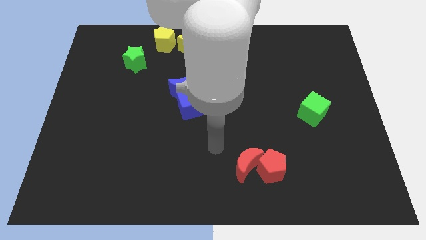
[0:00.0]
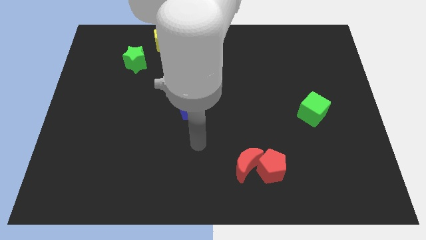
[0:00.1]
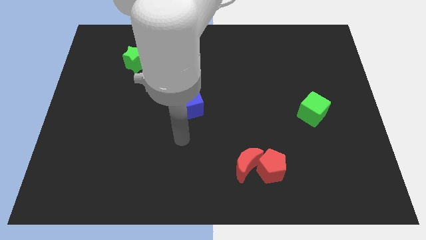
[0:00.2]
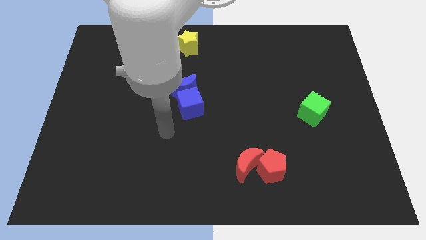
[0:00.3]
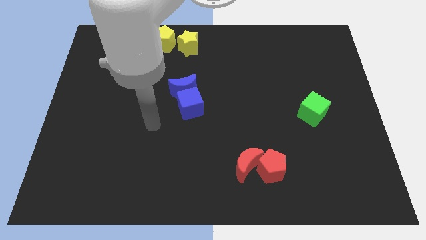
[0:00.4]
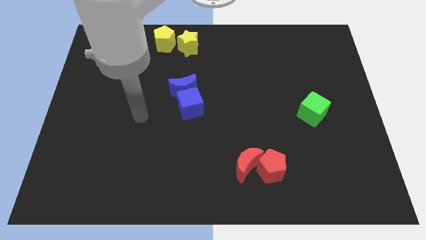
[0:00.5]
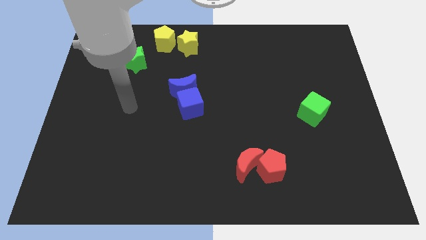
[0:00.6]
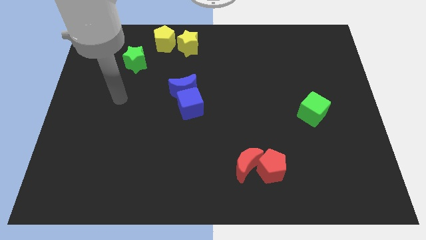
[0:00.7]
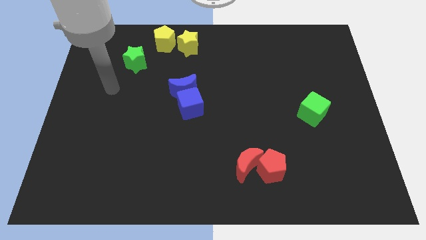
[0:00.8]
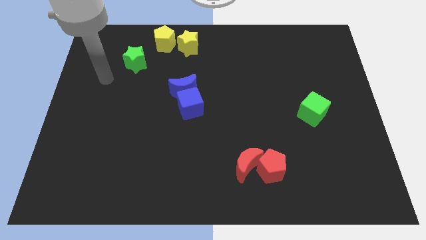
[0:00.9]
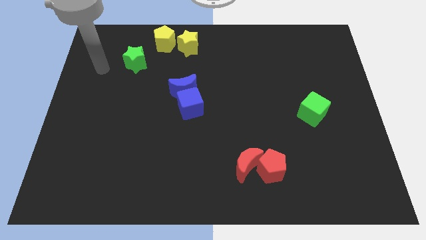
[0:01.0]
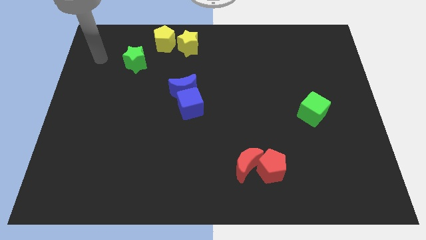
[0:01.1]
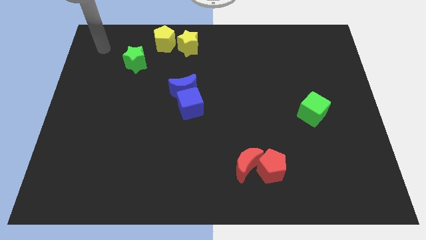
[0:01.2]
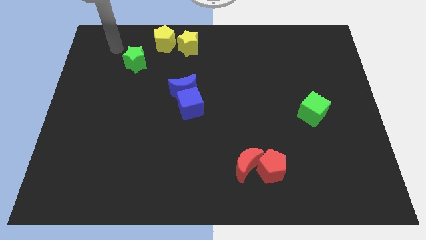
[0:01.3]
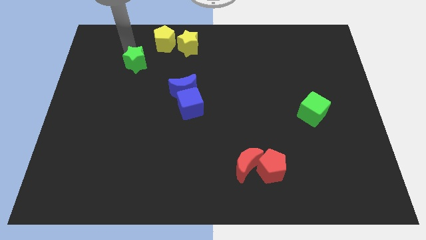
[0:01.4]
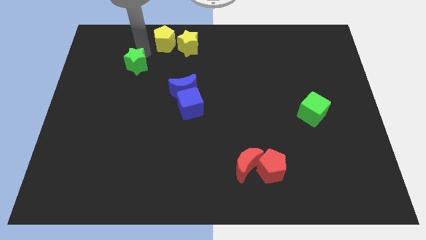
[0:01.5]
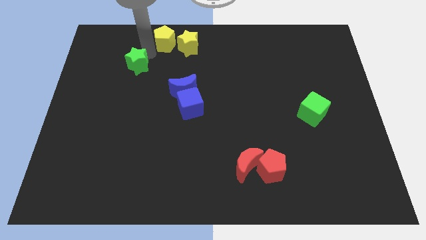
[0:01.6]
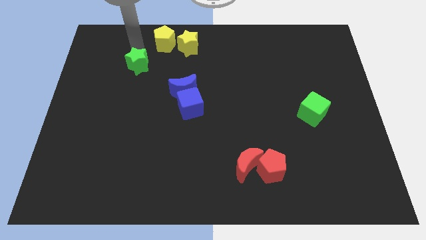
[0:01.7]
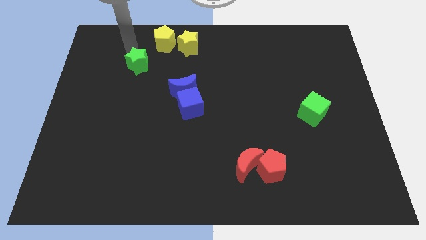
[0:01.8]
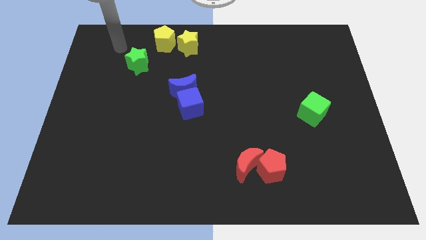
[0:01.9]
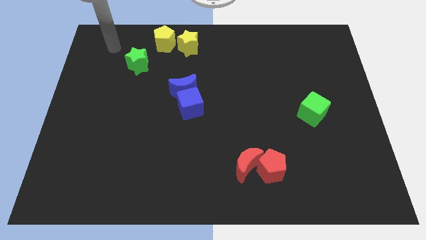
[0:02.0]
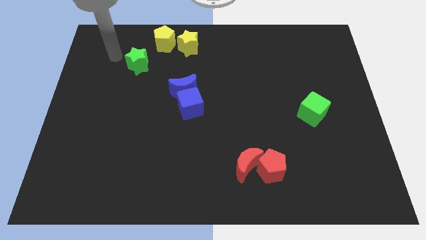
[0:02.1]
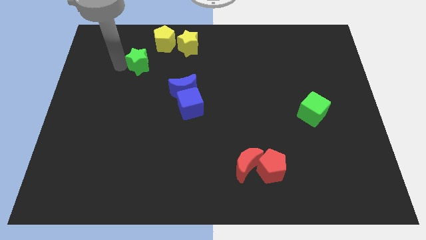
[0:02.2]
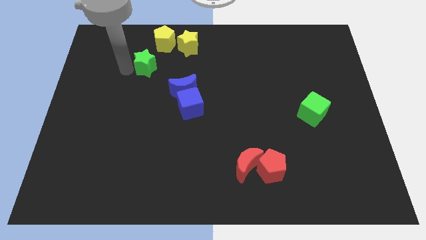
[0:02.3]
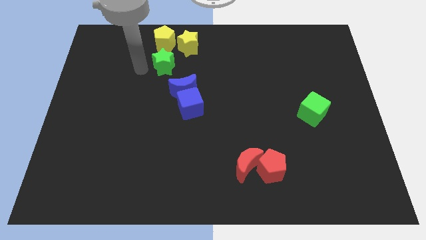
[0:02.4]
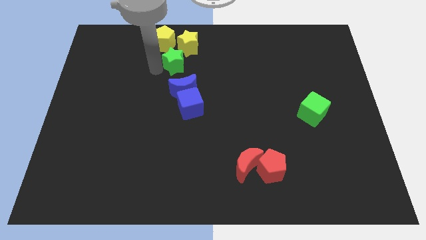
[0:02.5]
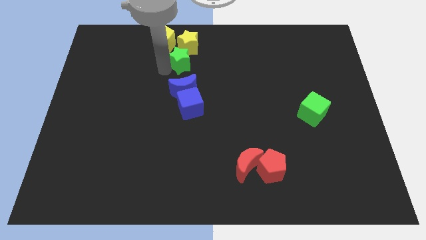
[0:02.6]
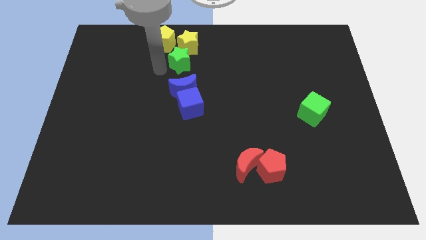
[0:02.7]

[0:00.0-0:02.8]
move green star in between blue and yellow blocks

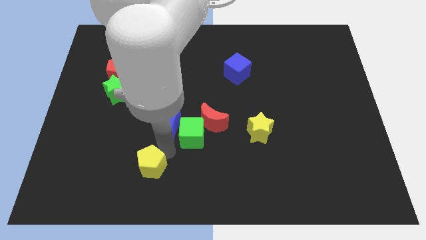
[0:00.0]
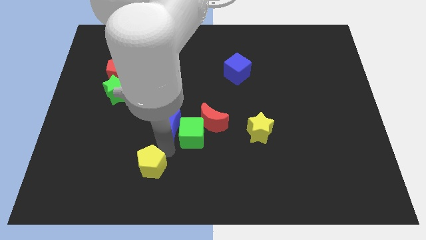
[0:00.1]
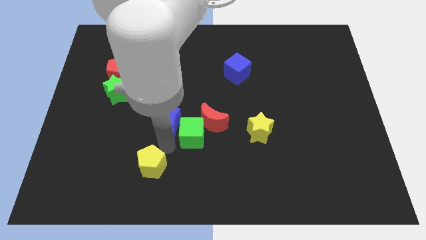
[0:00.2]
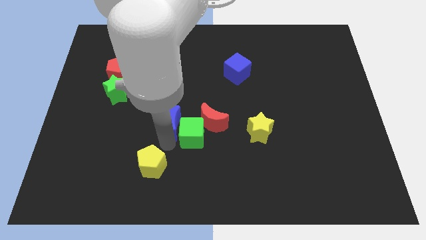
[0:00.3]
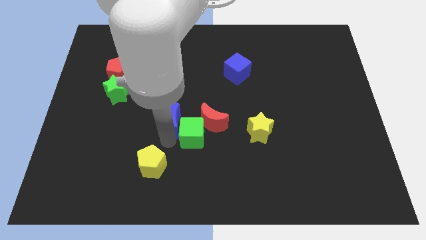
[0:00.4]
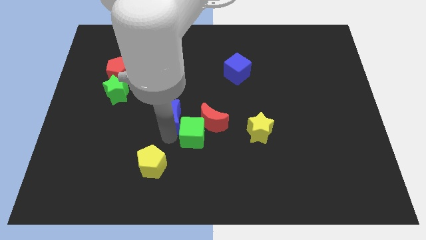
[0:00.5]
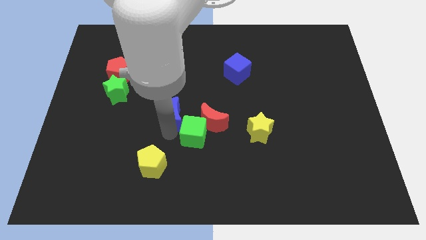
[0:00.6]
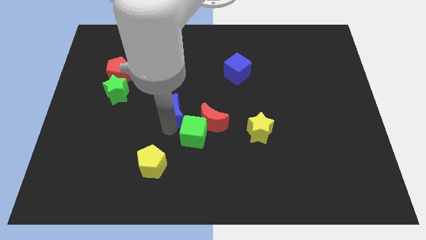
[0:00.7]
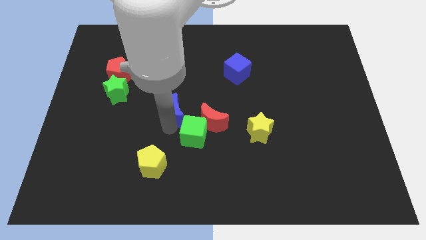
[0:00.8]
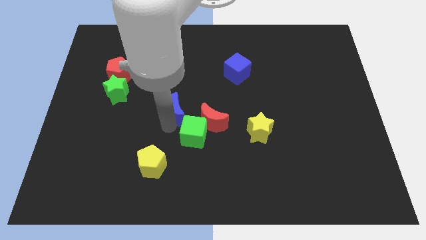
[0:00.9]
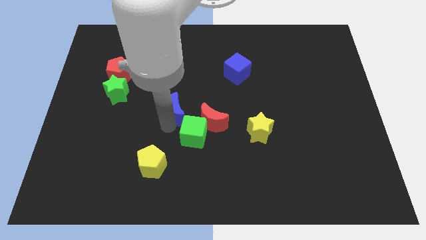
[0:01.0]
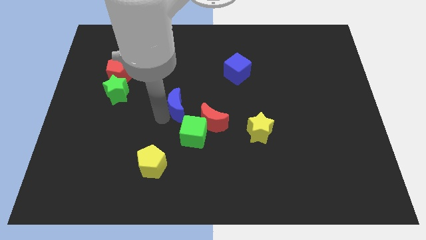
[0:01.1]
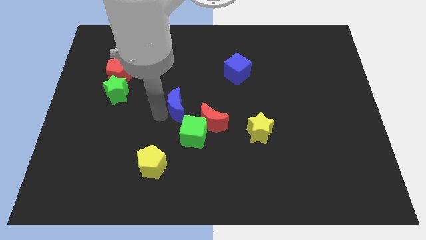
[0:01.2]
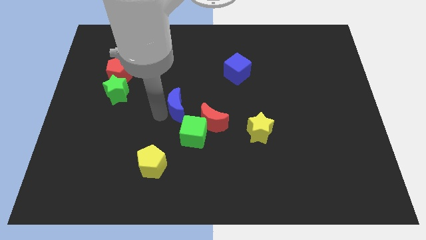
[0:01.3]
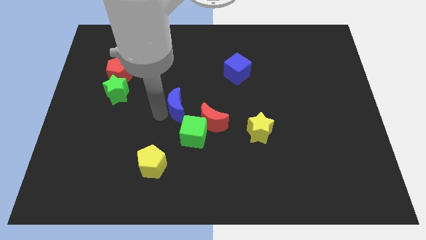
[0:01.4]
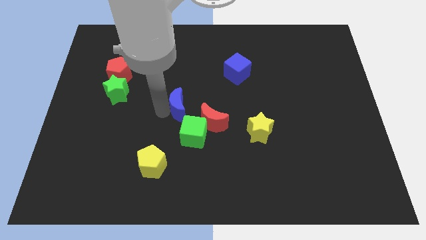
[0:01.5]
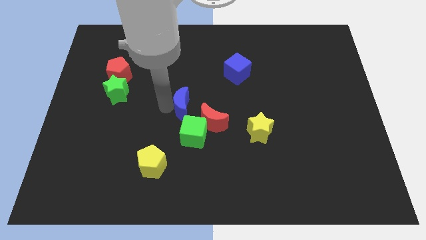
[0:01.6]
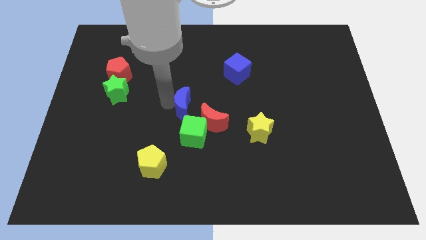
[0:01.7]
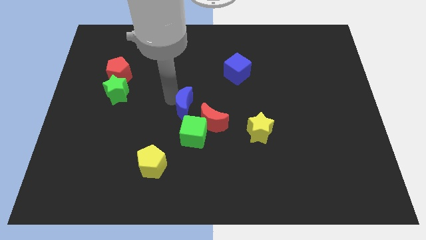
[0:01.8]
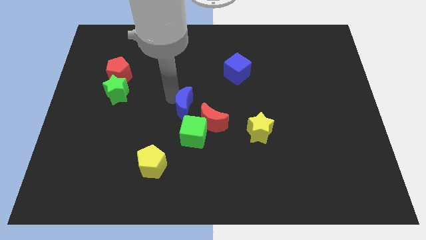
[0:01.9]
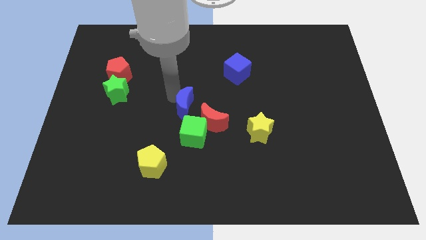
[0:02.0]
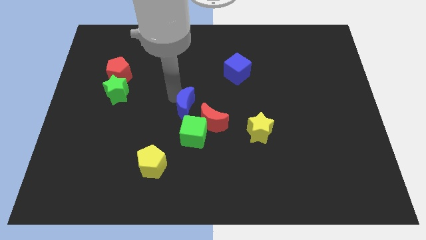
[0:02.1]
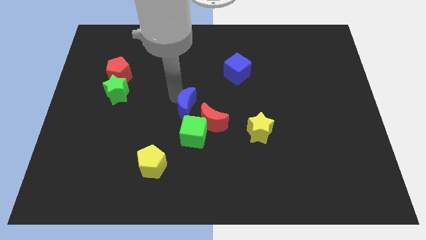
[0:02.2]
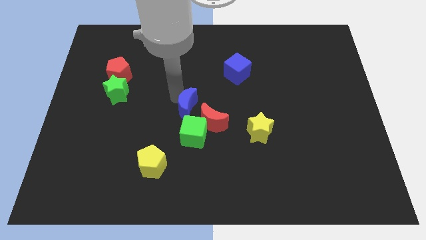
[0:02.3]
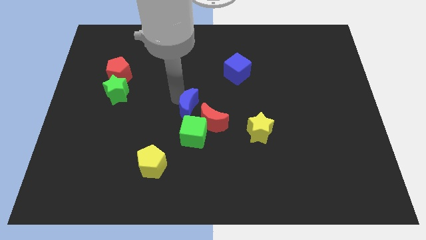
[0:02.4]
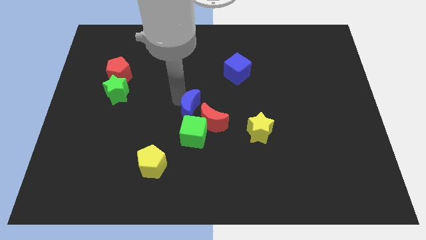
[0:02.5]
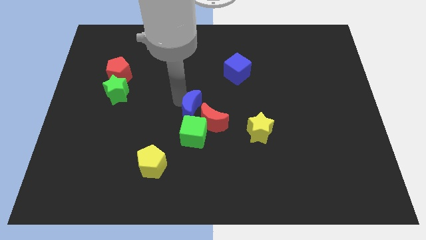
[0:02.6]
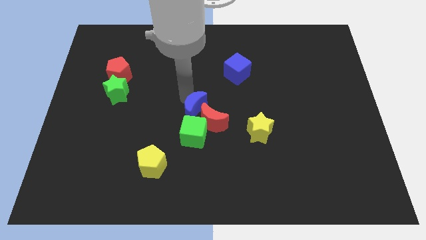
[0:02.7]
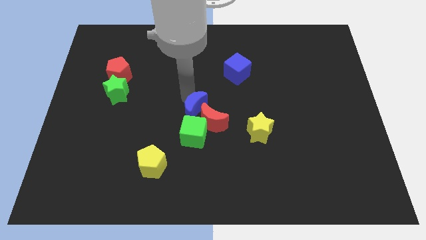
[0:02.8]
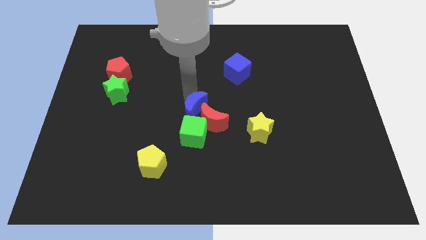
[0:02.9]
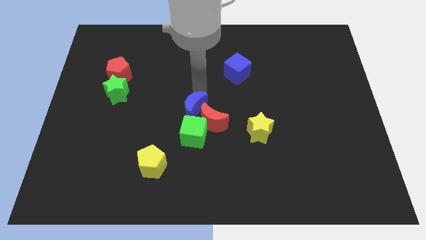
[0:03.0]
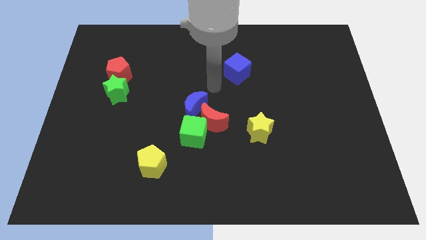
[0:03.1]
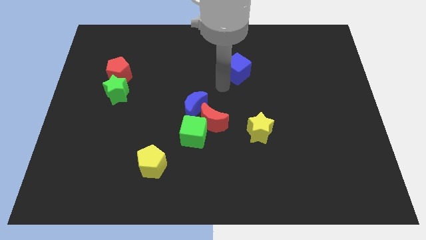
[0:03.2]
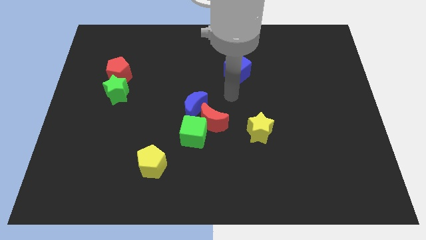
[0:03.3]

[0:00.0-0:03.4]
move the blue crescent close to the red crescent

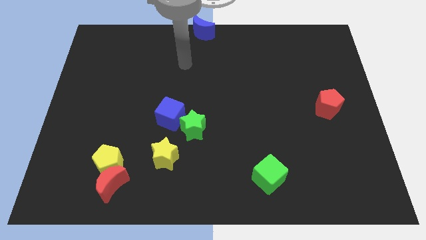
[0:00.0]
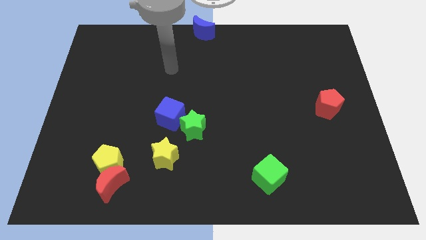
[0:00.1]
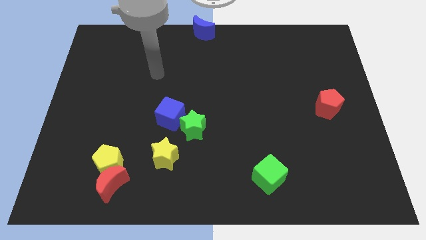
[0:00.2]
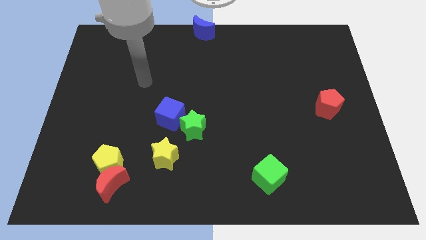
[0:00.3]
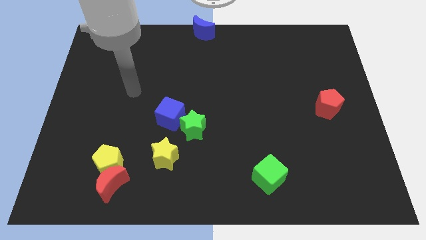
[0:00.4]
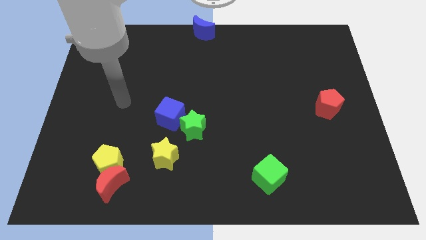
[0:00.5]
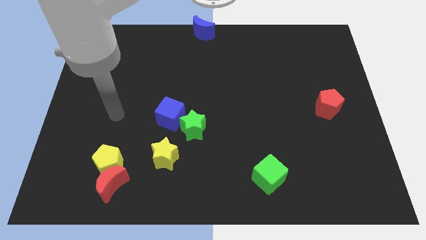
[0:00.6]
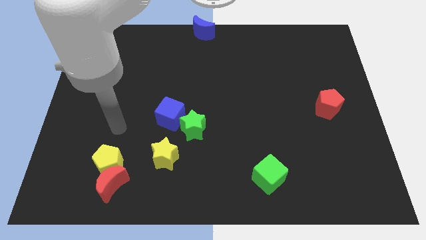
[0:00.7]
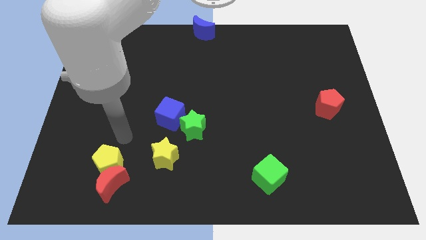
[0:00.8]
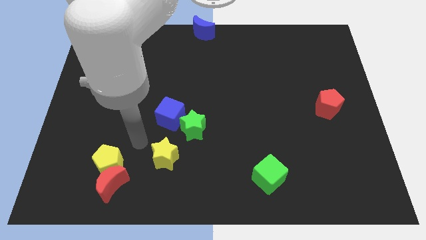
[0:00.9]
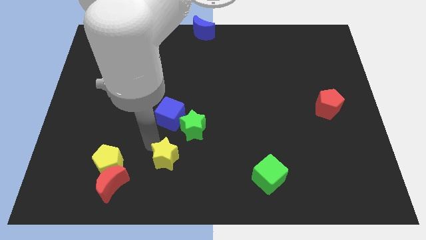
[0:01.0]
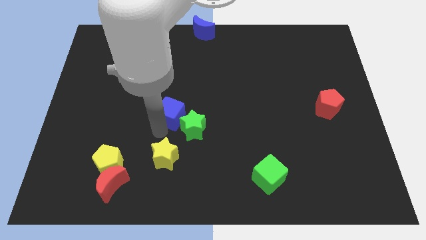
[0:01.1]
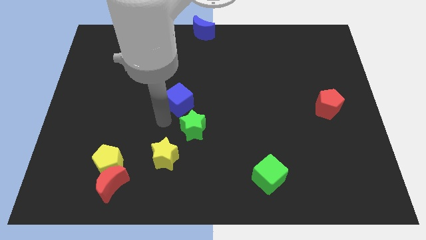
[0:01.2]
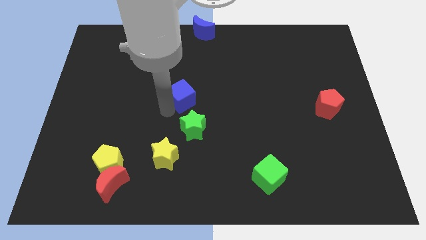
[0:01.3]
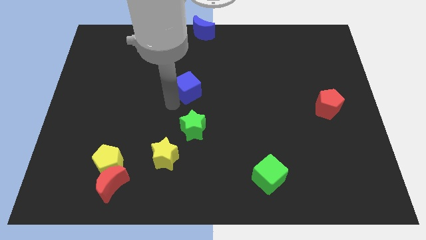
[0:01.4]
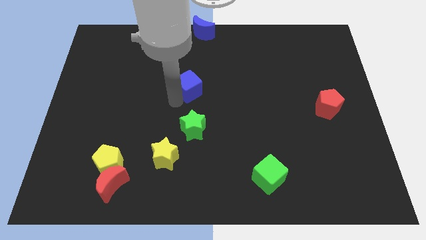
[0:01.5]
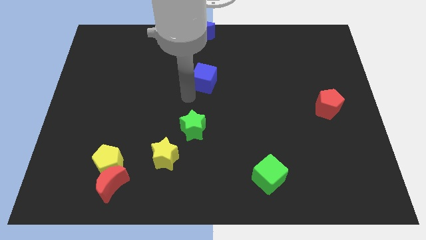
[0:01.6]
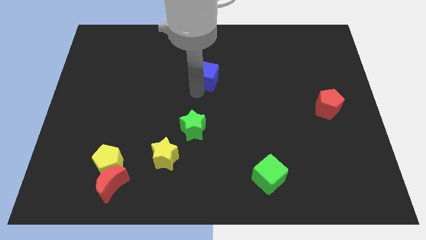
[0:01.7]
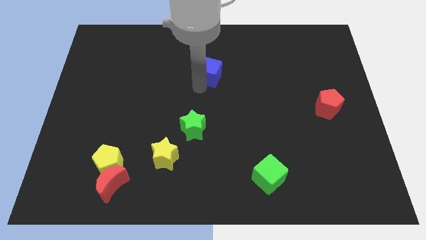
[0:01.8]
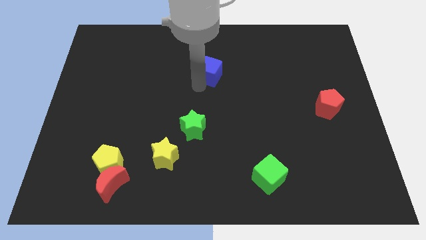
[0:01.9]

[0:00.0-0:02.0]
separate the blue cube from the green star

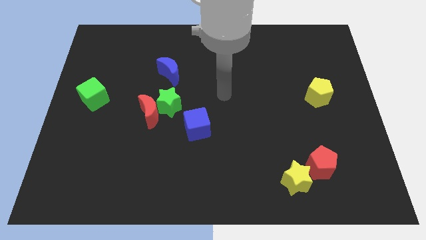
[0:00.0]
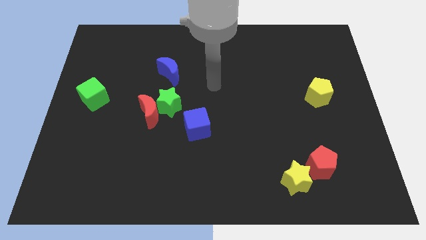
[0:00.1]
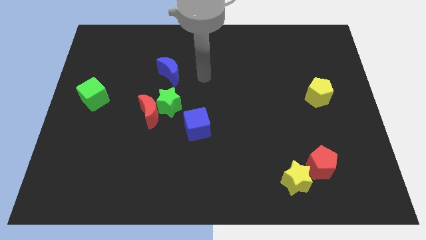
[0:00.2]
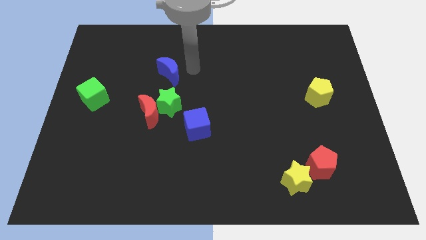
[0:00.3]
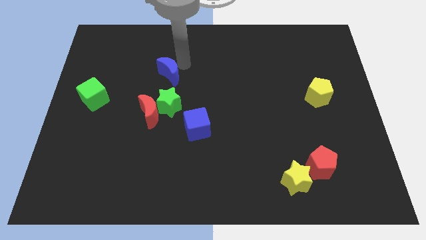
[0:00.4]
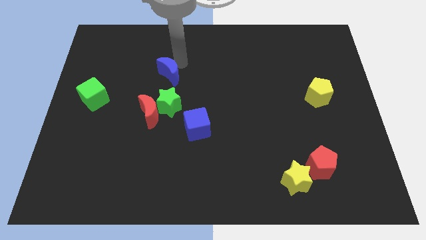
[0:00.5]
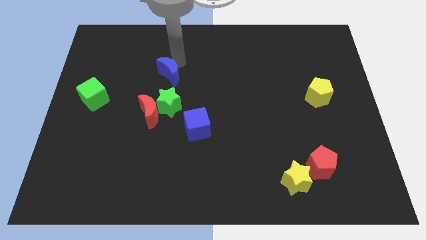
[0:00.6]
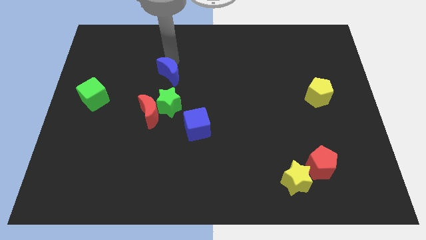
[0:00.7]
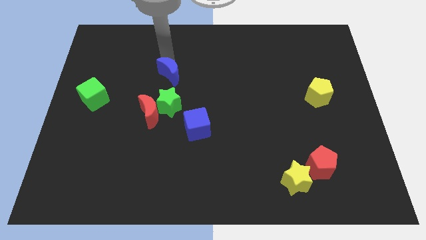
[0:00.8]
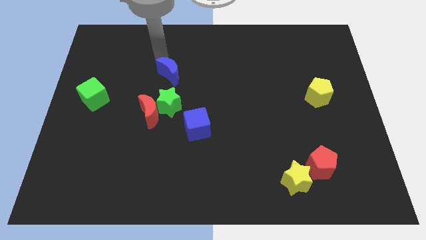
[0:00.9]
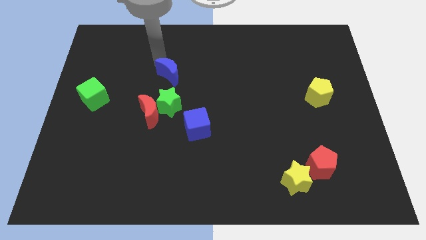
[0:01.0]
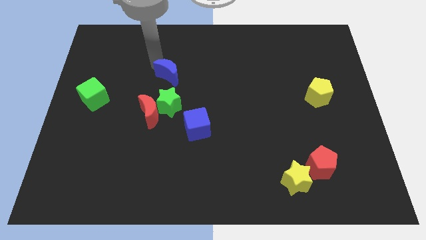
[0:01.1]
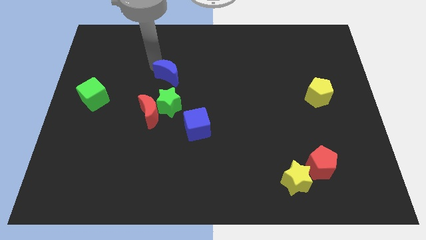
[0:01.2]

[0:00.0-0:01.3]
place the blue crescent at the top of green star
